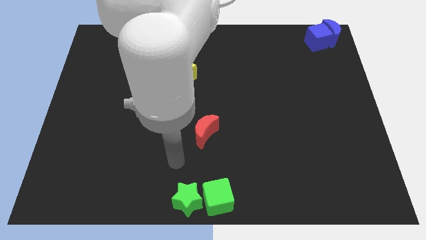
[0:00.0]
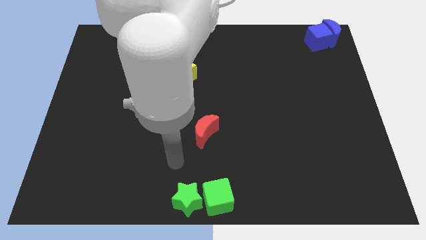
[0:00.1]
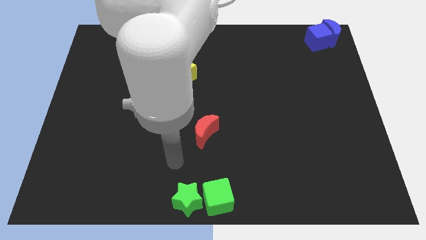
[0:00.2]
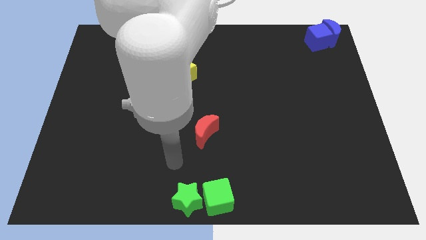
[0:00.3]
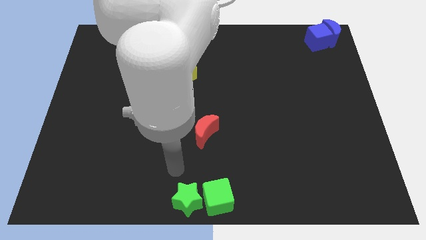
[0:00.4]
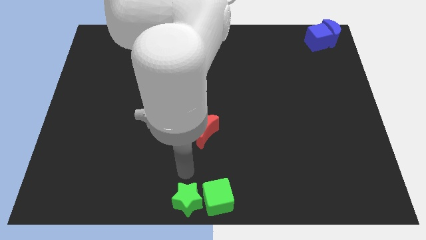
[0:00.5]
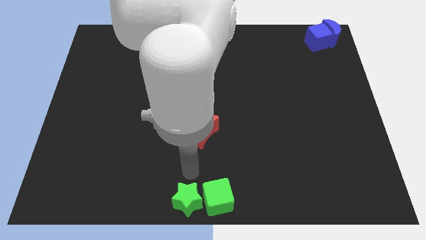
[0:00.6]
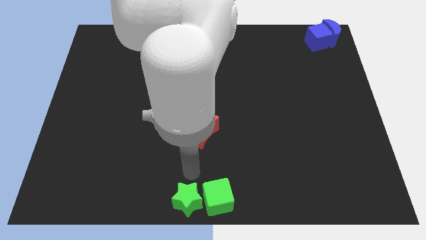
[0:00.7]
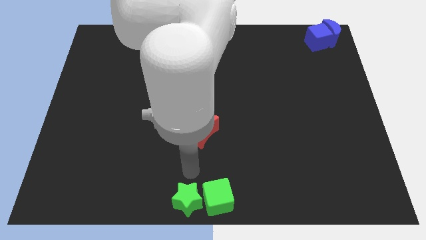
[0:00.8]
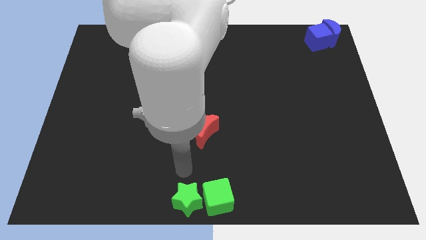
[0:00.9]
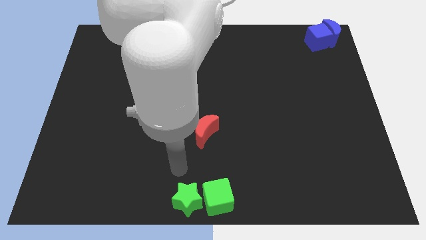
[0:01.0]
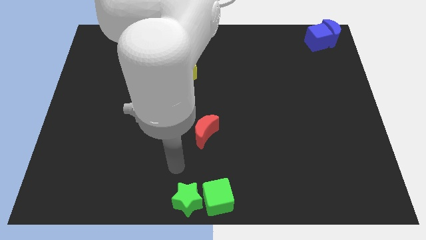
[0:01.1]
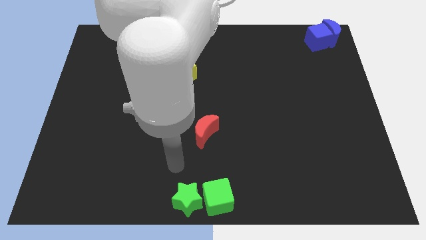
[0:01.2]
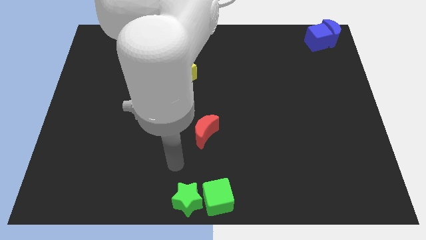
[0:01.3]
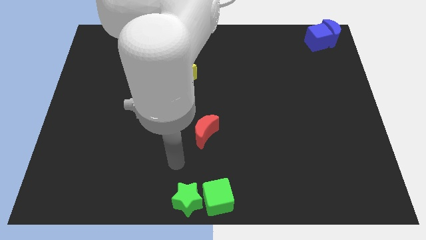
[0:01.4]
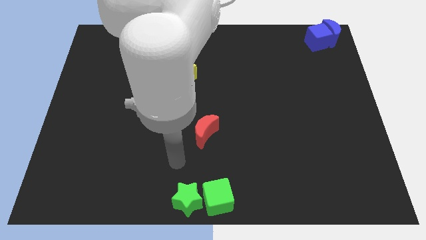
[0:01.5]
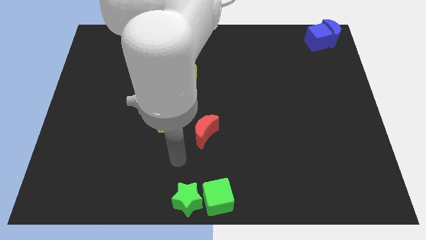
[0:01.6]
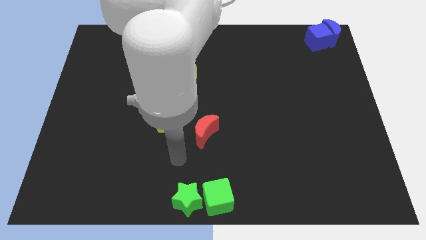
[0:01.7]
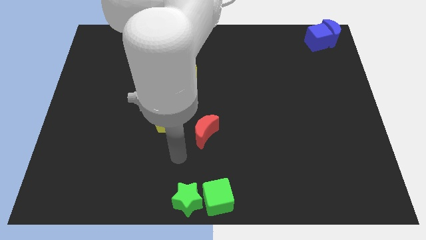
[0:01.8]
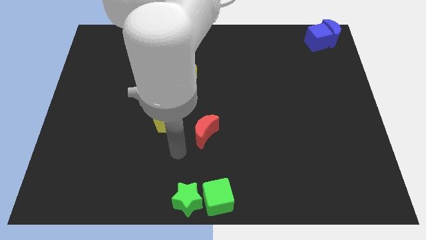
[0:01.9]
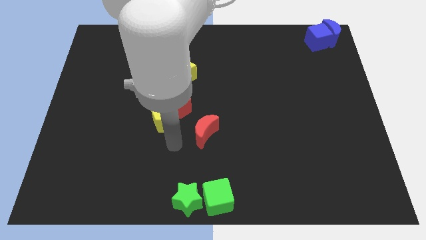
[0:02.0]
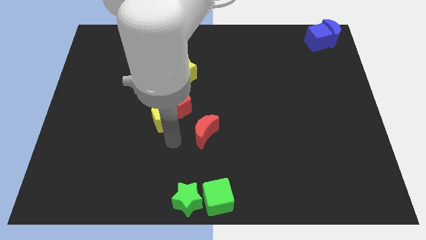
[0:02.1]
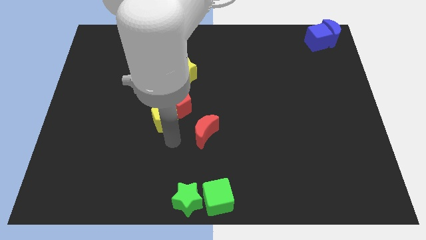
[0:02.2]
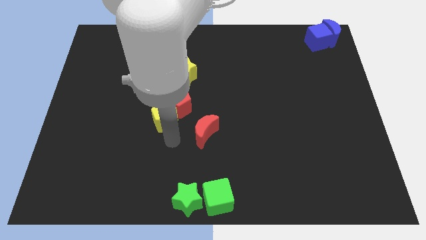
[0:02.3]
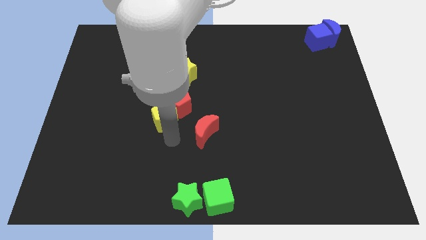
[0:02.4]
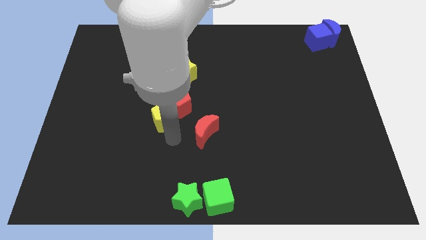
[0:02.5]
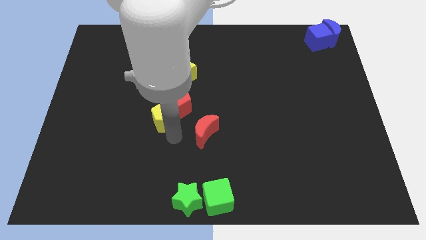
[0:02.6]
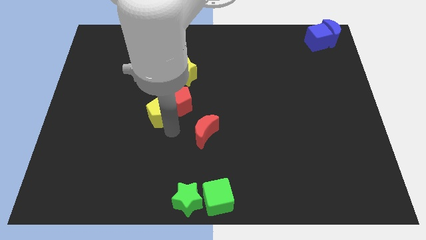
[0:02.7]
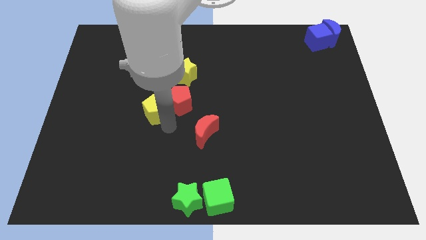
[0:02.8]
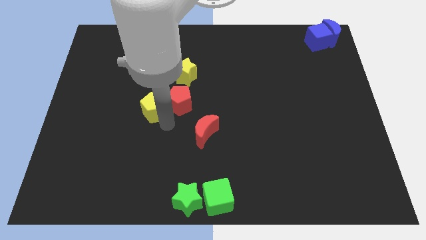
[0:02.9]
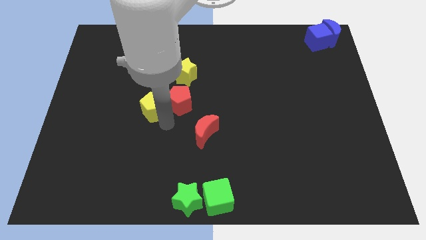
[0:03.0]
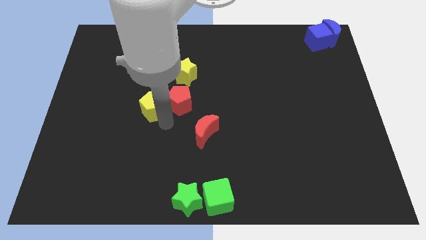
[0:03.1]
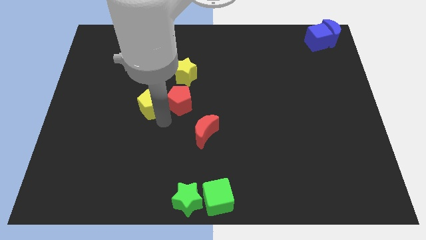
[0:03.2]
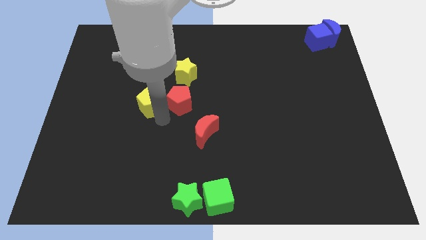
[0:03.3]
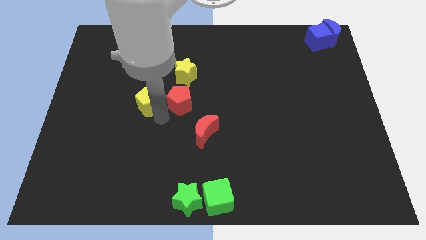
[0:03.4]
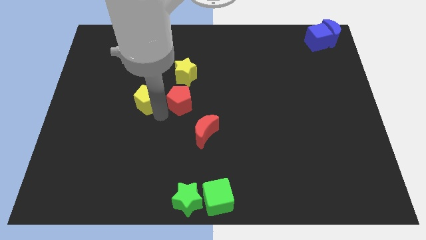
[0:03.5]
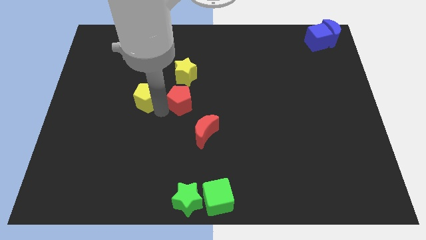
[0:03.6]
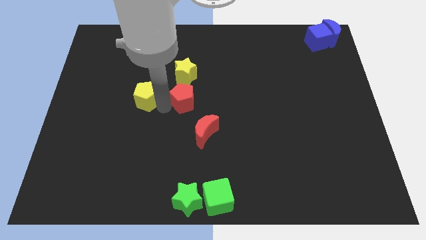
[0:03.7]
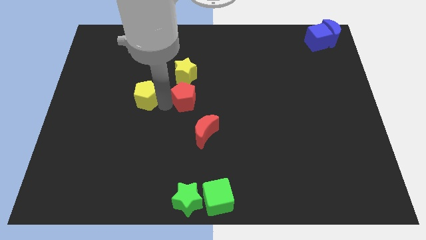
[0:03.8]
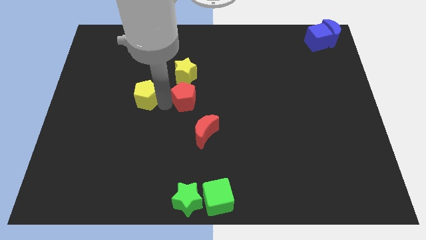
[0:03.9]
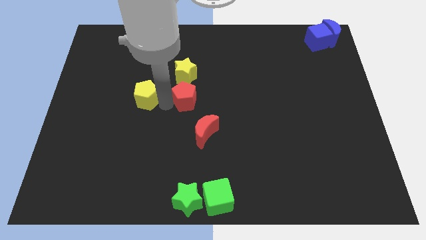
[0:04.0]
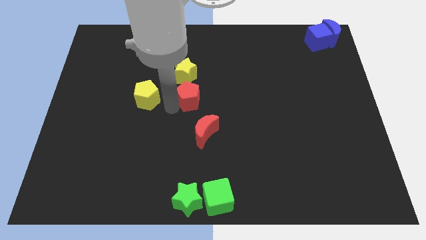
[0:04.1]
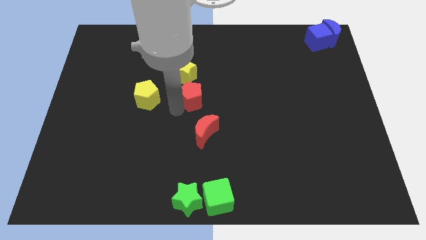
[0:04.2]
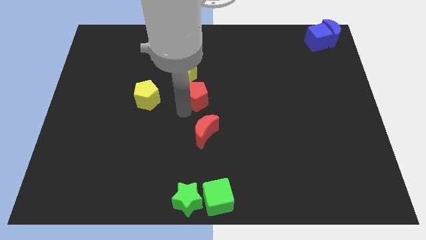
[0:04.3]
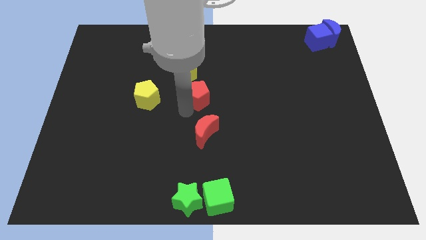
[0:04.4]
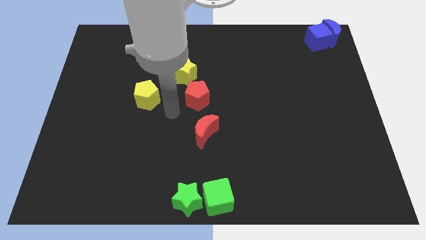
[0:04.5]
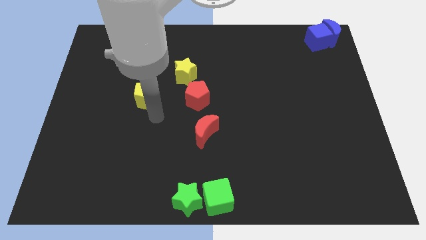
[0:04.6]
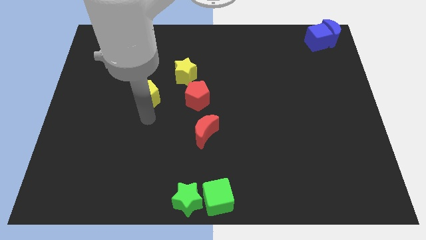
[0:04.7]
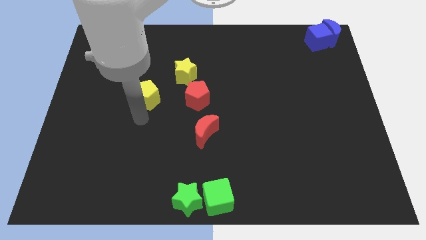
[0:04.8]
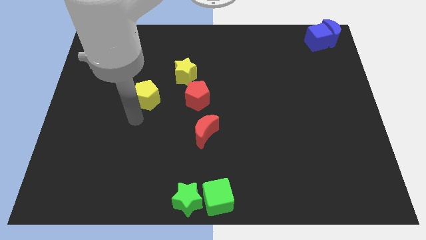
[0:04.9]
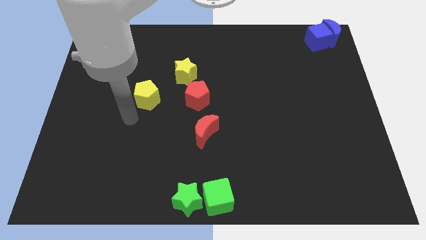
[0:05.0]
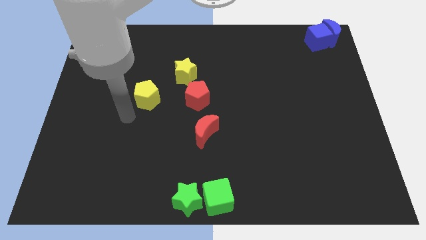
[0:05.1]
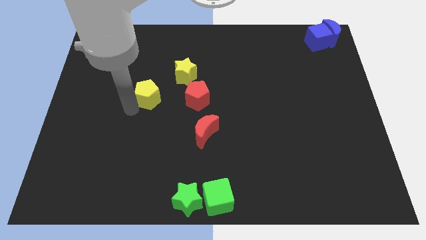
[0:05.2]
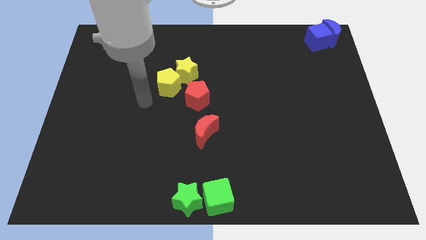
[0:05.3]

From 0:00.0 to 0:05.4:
adjust the yellow pentagon and the red pentagon to form a triangle with the yellow star

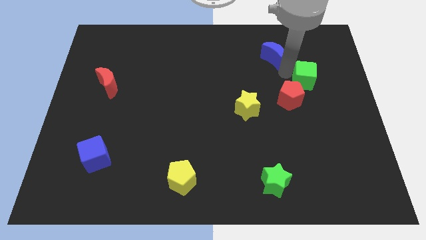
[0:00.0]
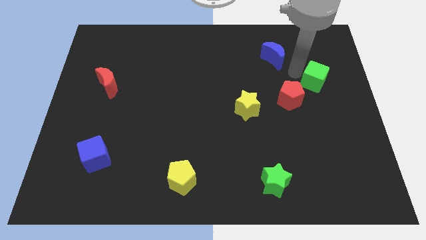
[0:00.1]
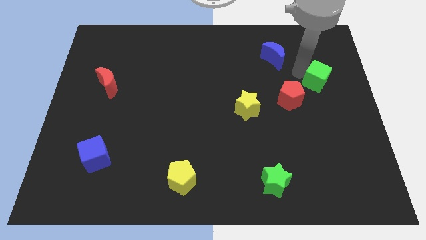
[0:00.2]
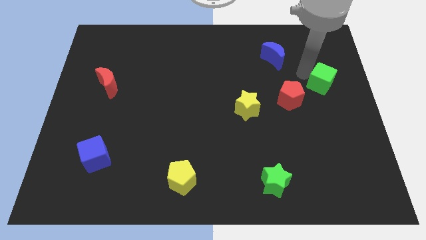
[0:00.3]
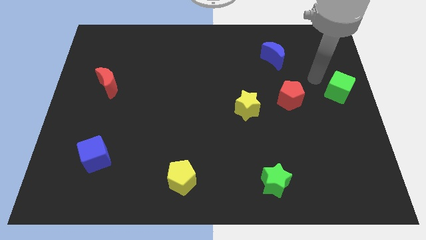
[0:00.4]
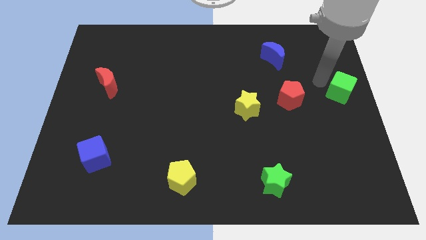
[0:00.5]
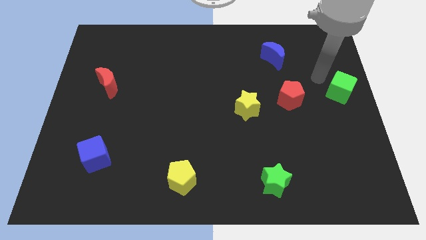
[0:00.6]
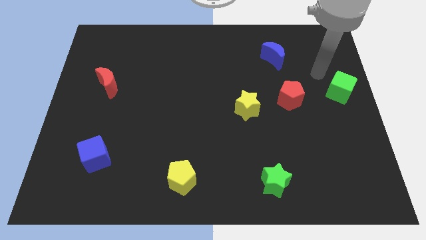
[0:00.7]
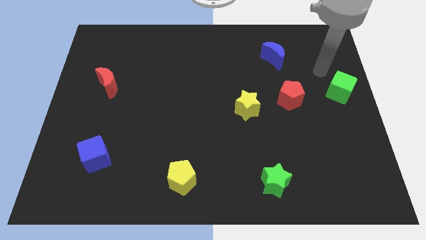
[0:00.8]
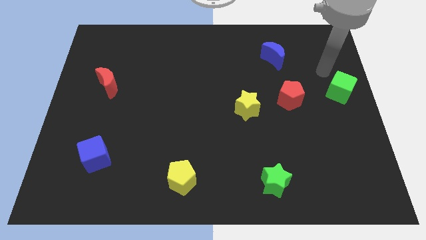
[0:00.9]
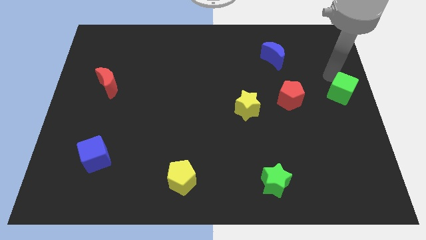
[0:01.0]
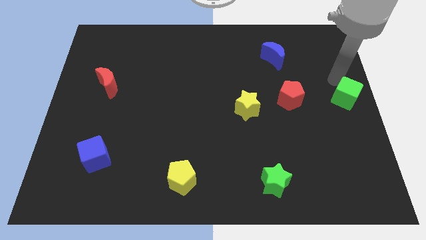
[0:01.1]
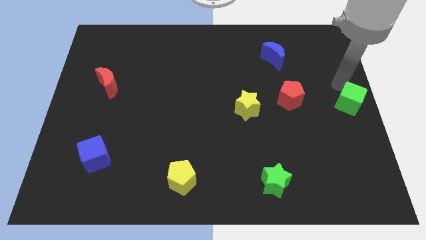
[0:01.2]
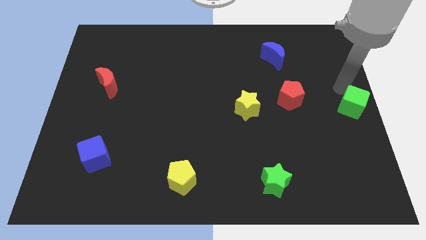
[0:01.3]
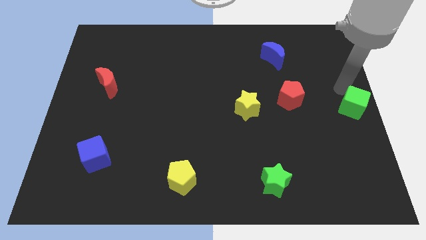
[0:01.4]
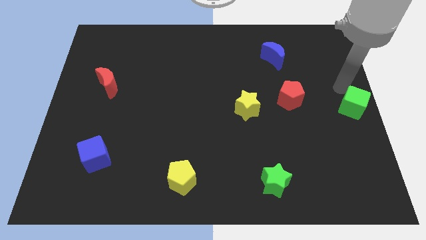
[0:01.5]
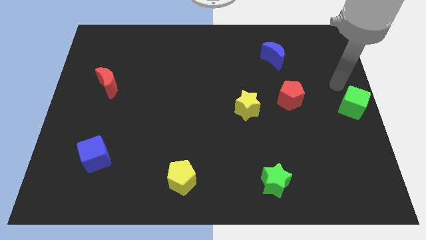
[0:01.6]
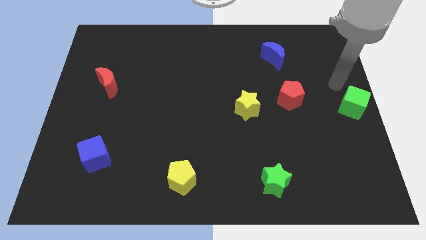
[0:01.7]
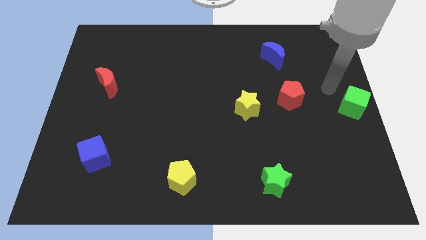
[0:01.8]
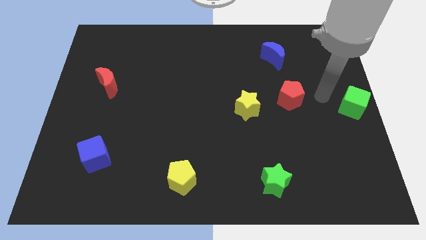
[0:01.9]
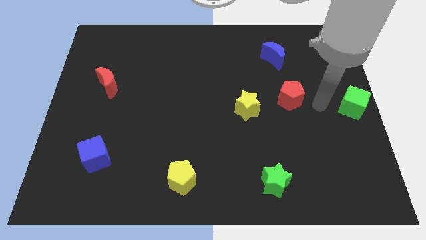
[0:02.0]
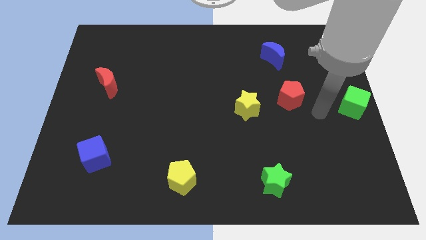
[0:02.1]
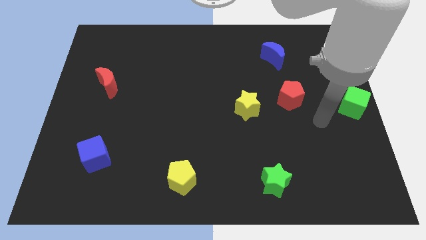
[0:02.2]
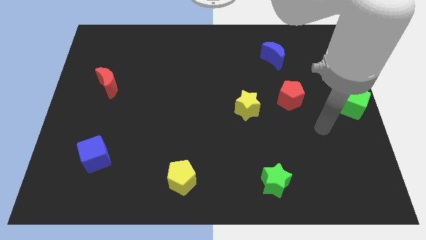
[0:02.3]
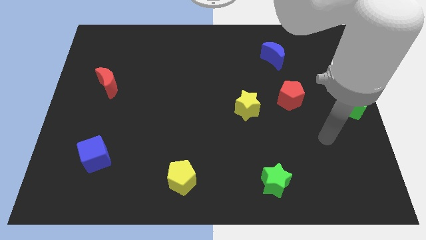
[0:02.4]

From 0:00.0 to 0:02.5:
place the green cube at the center right side of the board

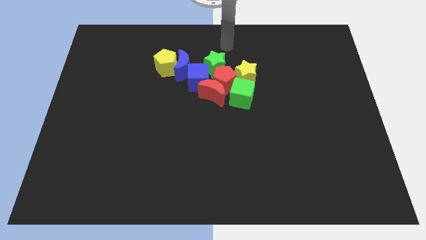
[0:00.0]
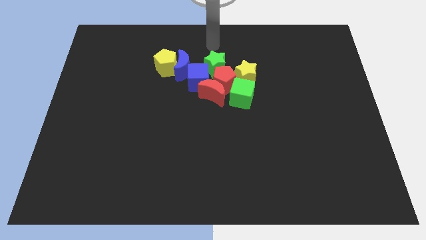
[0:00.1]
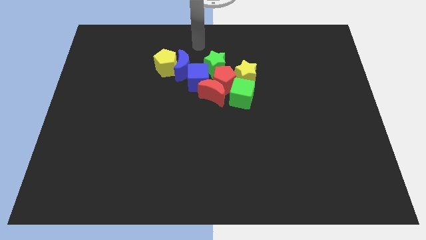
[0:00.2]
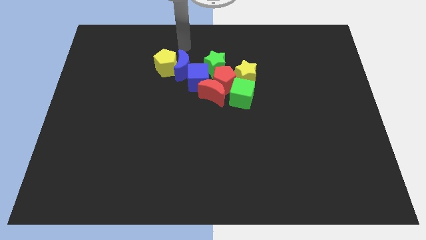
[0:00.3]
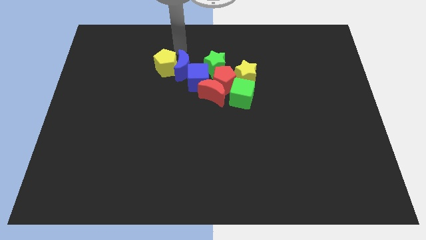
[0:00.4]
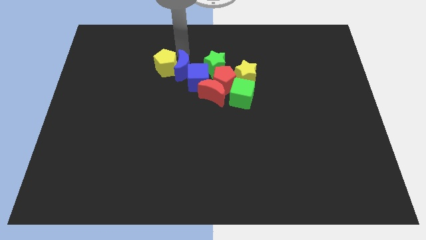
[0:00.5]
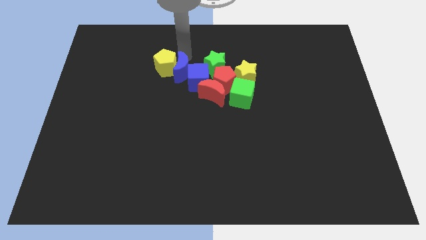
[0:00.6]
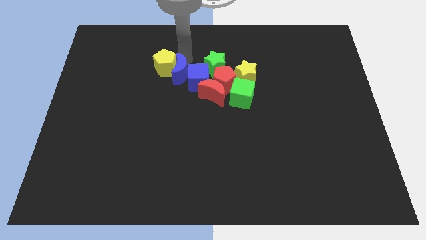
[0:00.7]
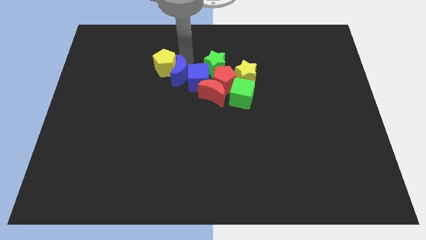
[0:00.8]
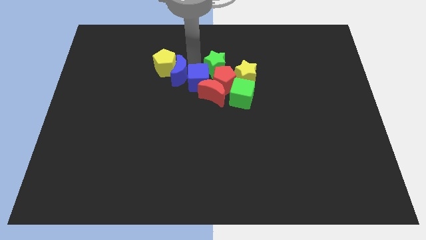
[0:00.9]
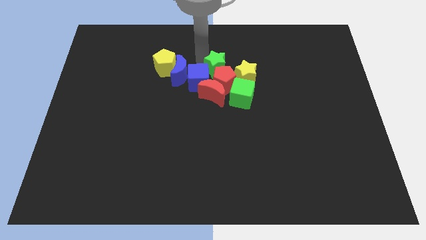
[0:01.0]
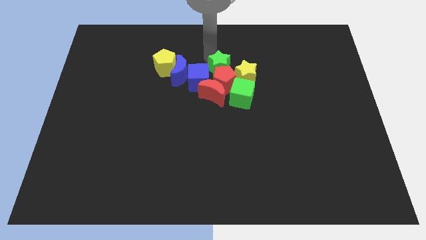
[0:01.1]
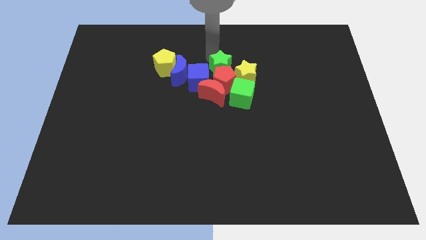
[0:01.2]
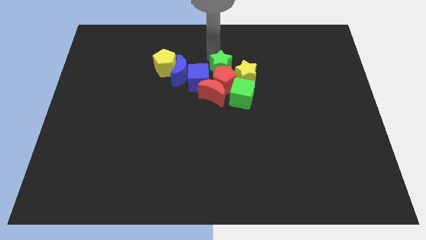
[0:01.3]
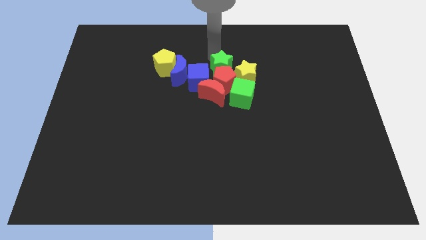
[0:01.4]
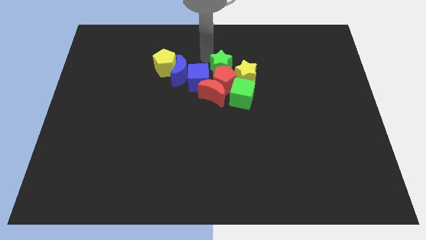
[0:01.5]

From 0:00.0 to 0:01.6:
push the green star to the top of the red pentagon
